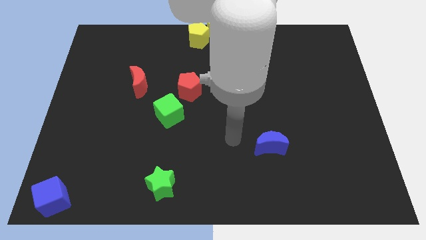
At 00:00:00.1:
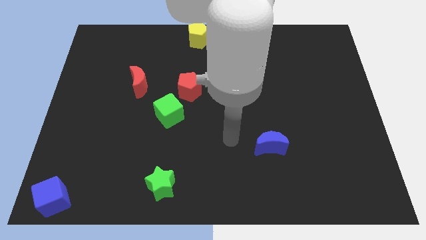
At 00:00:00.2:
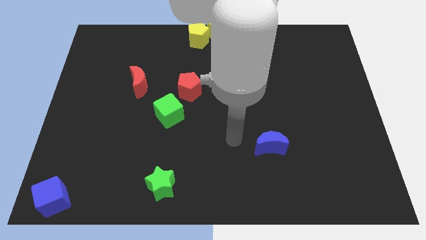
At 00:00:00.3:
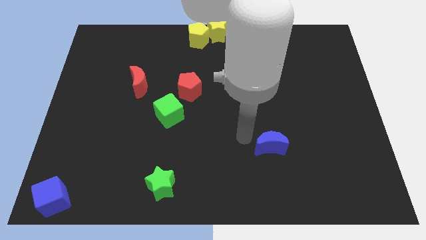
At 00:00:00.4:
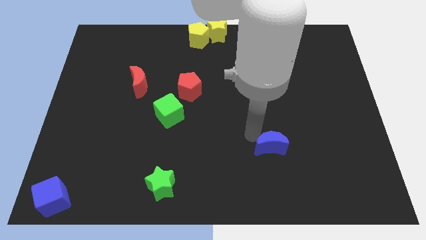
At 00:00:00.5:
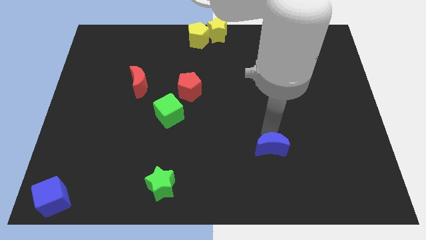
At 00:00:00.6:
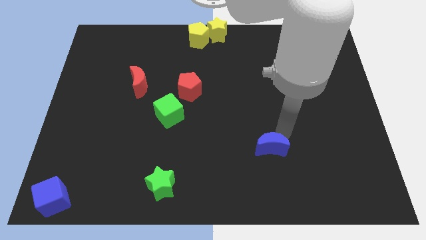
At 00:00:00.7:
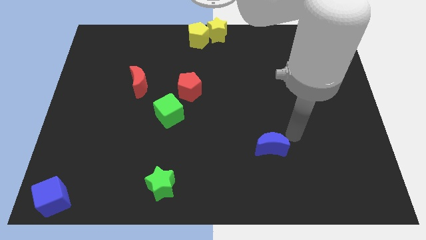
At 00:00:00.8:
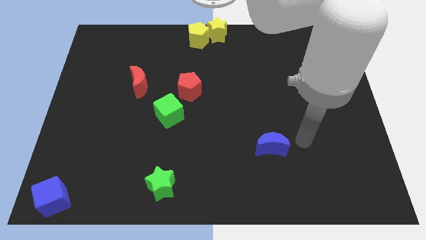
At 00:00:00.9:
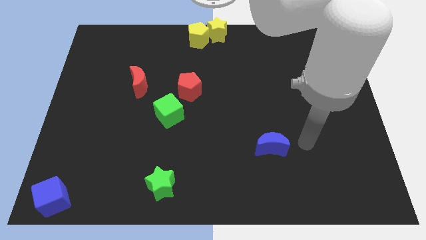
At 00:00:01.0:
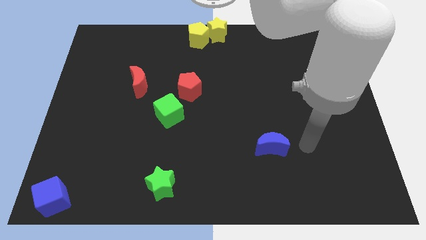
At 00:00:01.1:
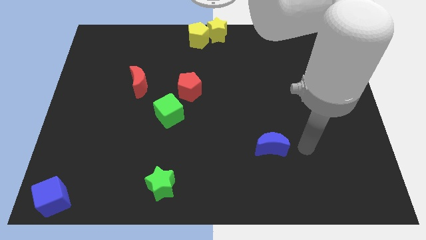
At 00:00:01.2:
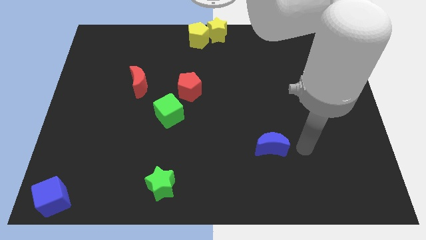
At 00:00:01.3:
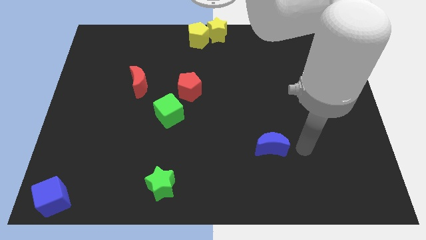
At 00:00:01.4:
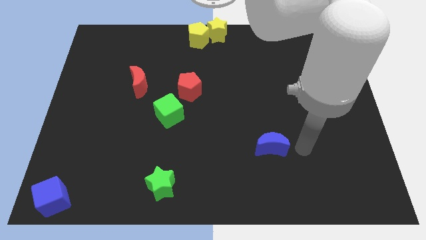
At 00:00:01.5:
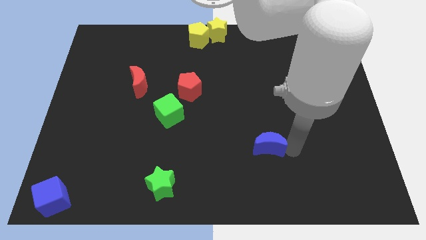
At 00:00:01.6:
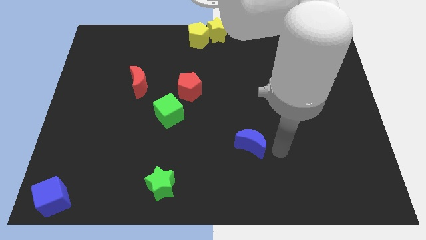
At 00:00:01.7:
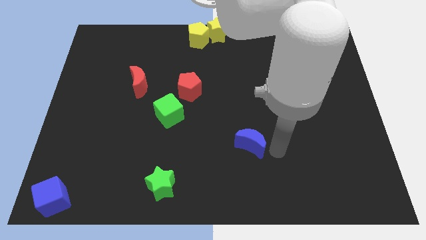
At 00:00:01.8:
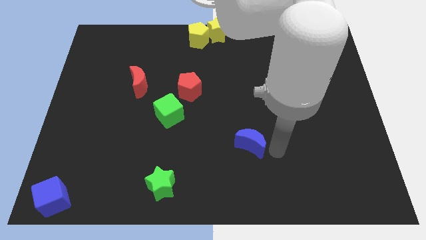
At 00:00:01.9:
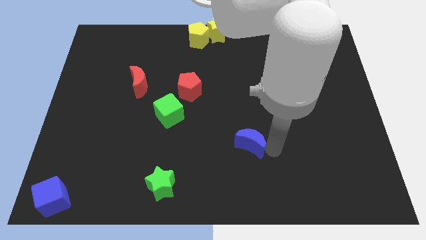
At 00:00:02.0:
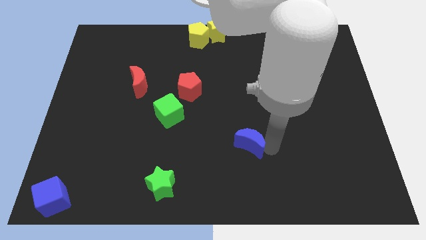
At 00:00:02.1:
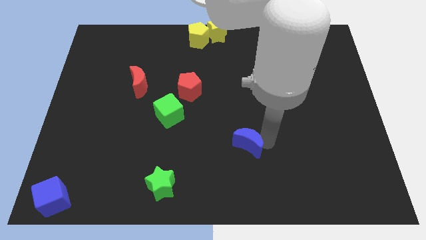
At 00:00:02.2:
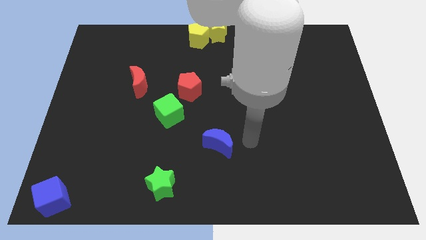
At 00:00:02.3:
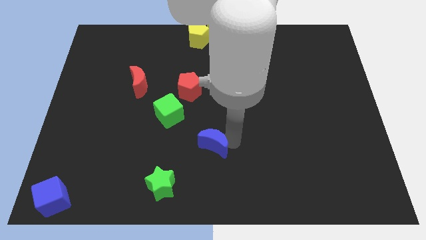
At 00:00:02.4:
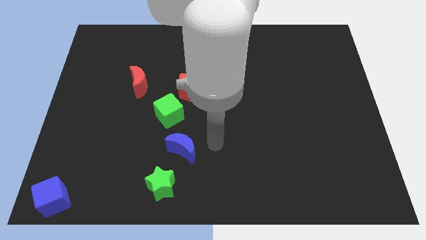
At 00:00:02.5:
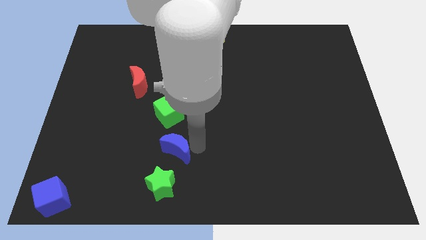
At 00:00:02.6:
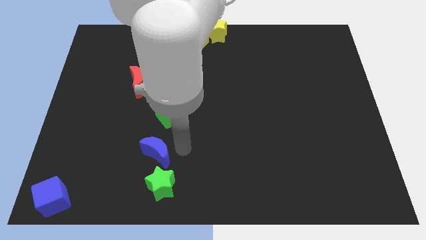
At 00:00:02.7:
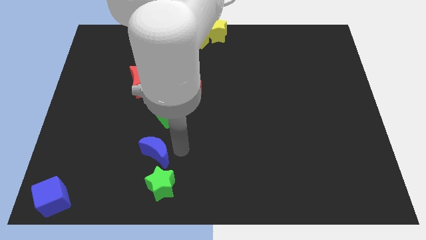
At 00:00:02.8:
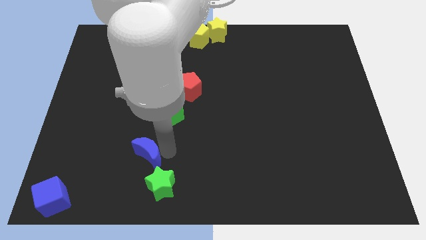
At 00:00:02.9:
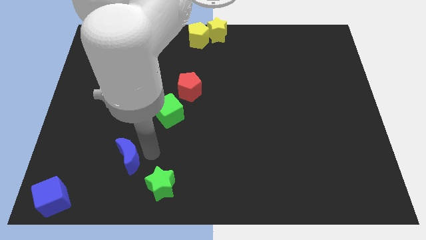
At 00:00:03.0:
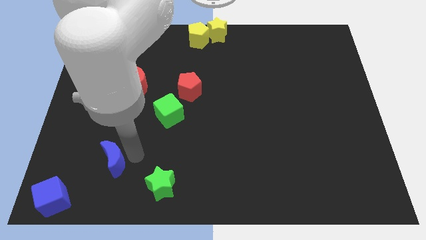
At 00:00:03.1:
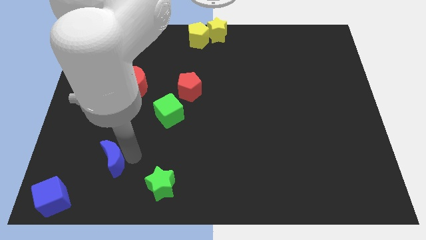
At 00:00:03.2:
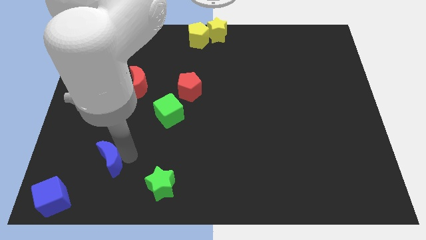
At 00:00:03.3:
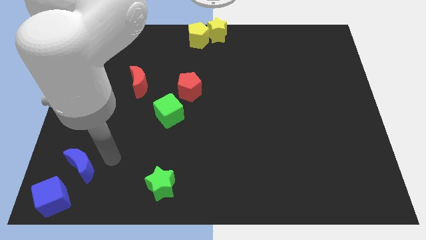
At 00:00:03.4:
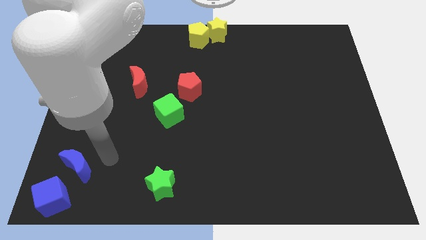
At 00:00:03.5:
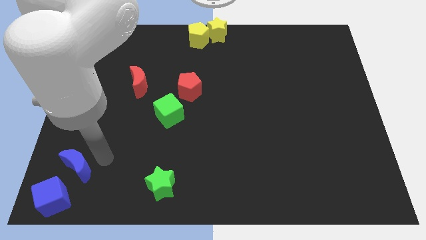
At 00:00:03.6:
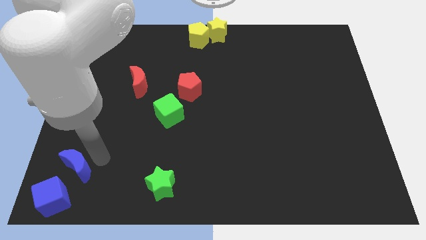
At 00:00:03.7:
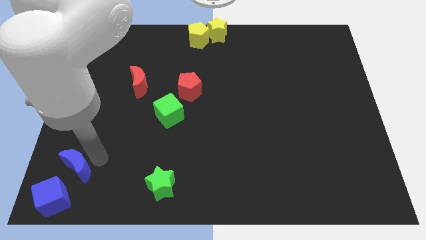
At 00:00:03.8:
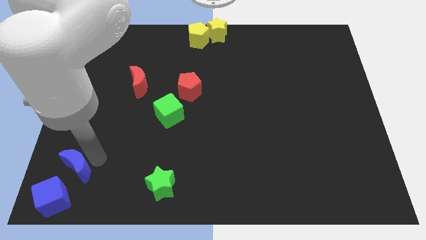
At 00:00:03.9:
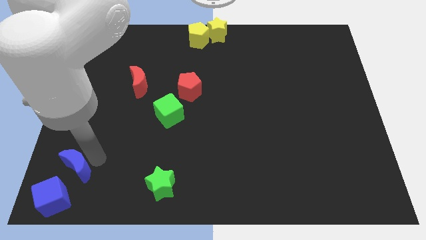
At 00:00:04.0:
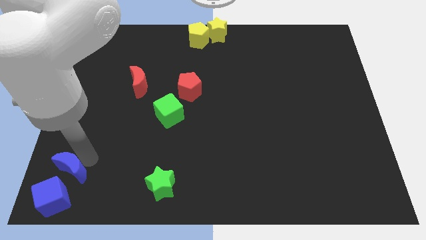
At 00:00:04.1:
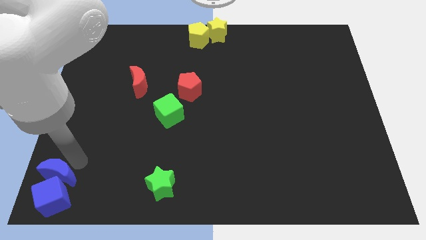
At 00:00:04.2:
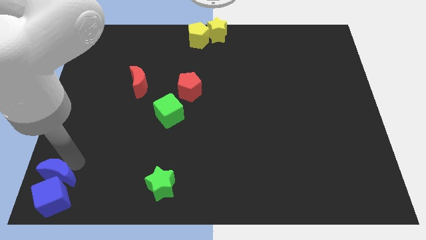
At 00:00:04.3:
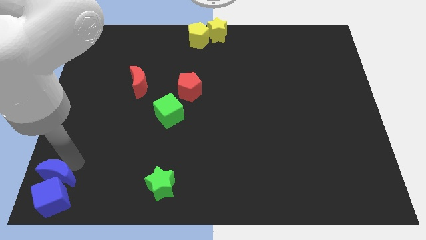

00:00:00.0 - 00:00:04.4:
move blue moon above blue cube

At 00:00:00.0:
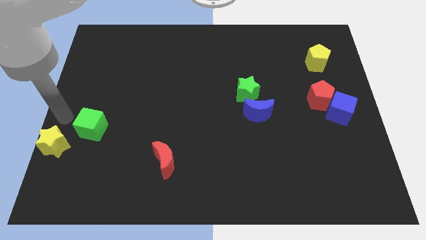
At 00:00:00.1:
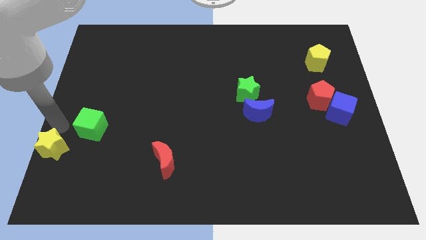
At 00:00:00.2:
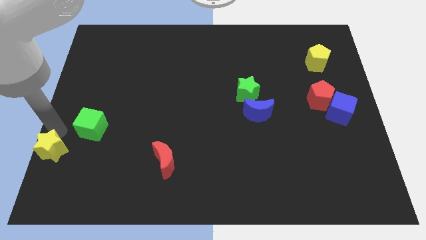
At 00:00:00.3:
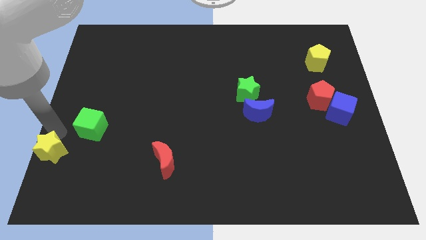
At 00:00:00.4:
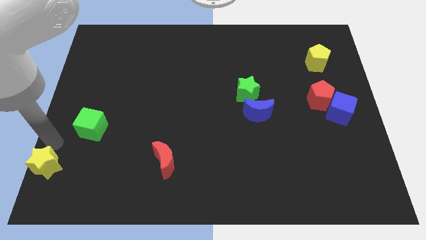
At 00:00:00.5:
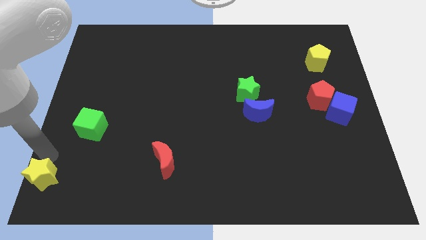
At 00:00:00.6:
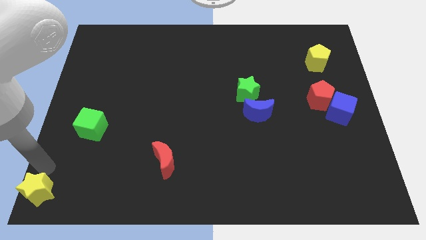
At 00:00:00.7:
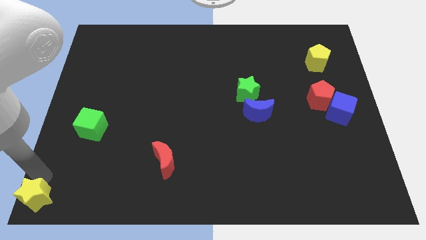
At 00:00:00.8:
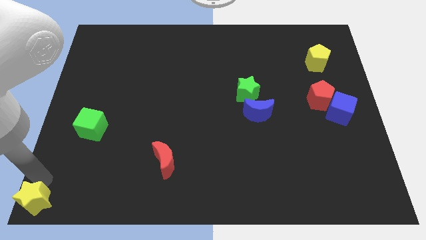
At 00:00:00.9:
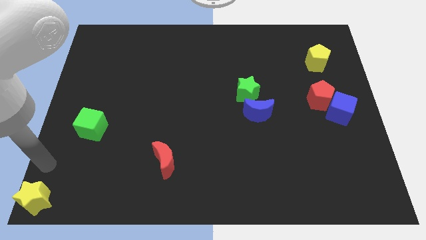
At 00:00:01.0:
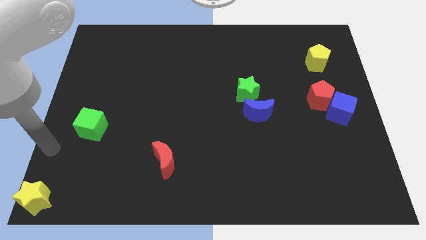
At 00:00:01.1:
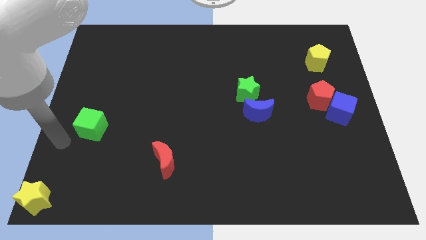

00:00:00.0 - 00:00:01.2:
place the yellow star to the left bottom

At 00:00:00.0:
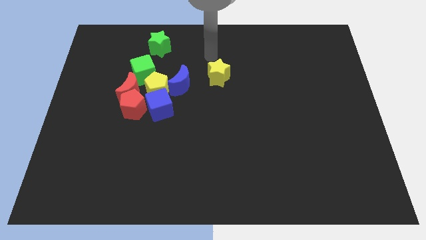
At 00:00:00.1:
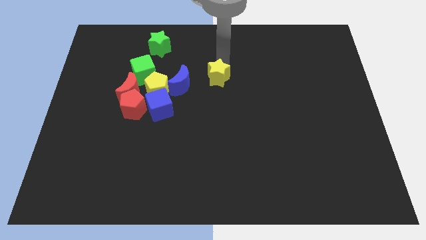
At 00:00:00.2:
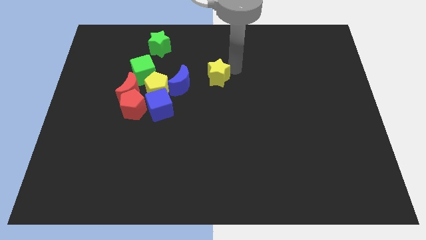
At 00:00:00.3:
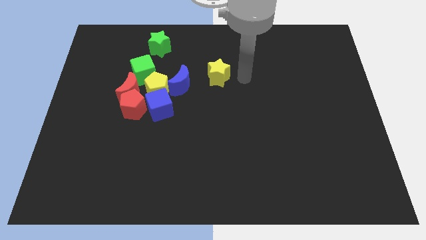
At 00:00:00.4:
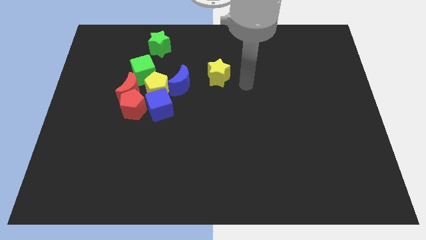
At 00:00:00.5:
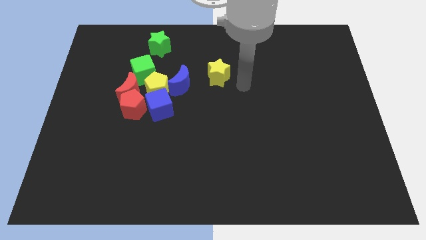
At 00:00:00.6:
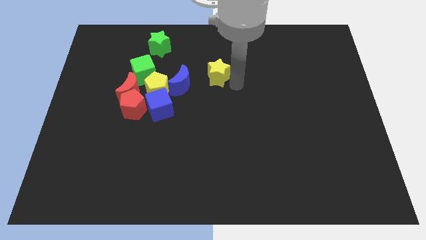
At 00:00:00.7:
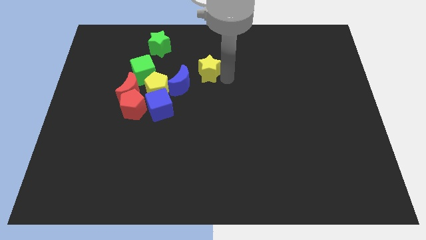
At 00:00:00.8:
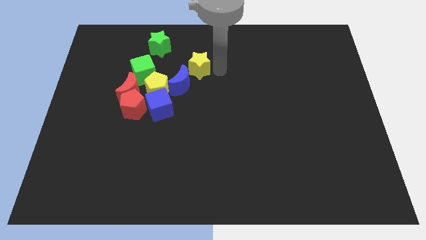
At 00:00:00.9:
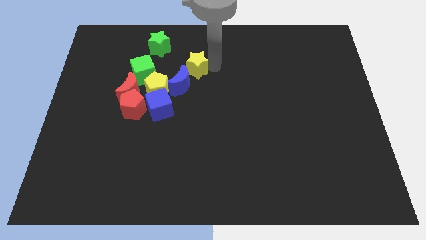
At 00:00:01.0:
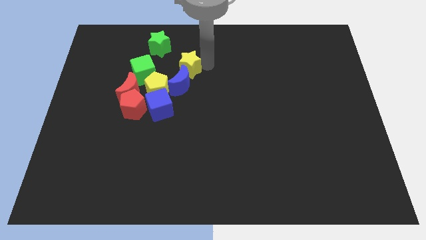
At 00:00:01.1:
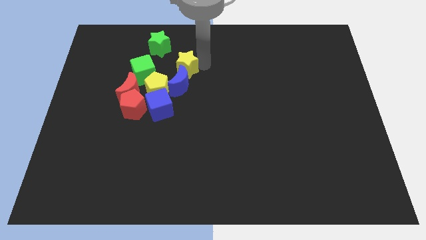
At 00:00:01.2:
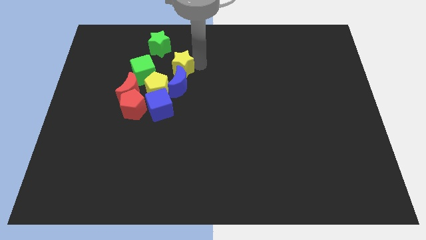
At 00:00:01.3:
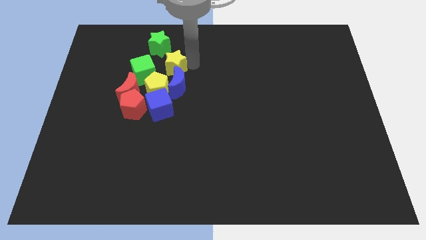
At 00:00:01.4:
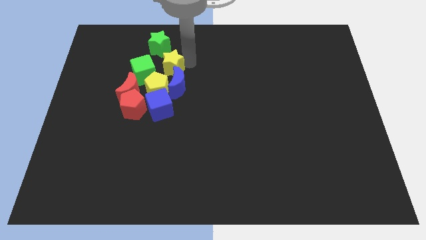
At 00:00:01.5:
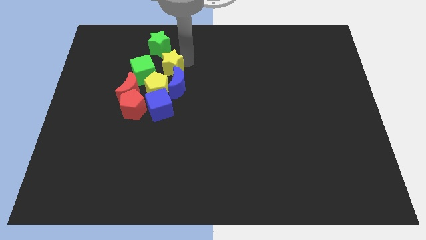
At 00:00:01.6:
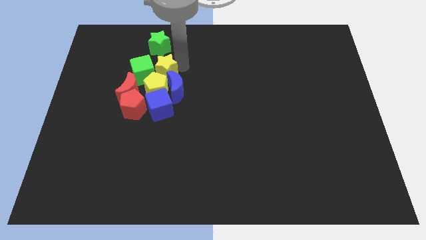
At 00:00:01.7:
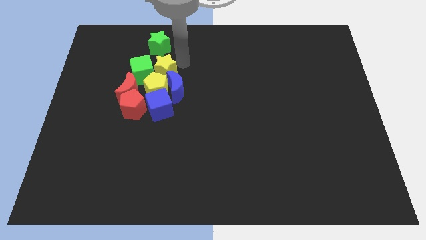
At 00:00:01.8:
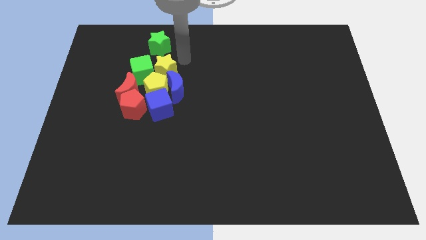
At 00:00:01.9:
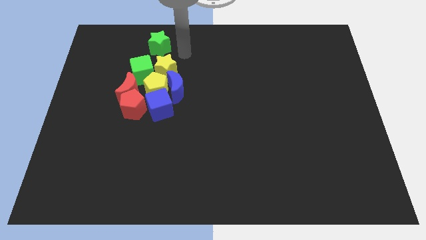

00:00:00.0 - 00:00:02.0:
push yellow star into the group of blocks to form a circle

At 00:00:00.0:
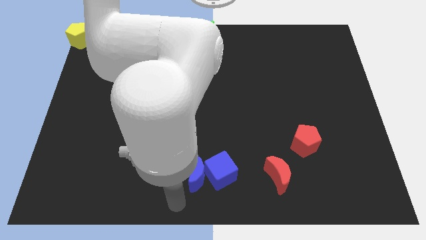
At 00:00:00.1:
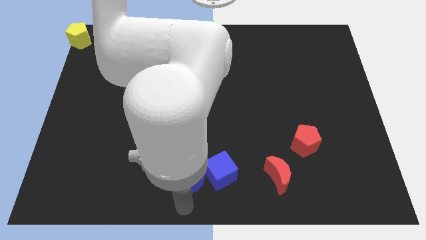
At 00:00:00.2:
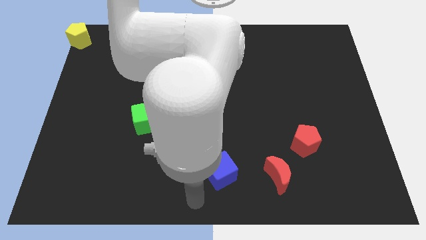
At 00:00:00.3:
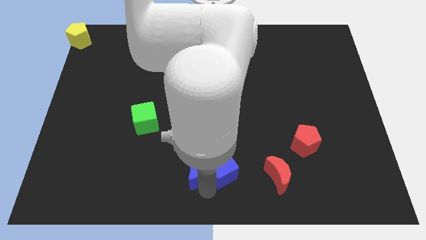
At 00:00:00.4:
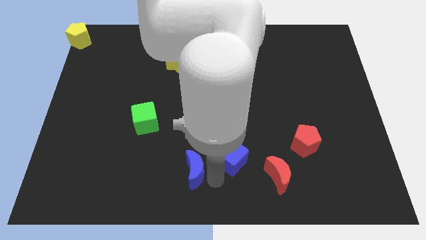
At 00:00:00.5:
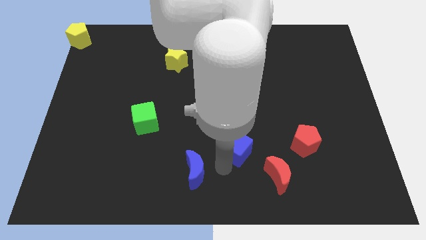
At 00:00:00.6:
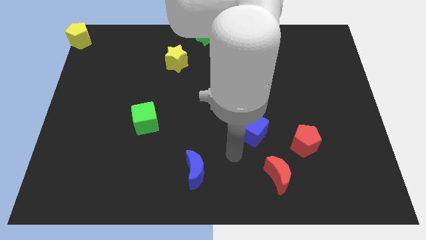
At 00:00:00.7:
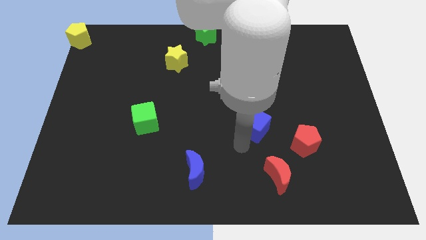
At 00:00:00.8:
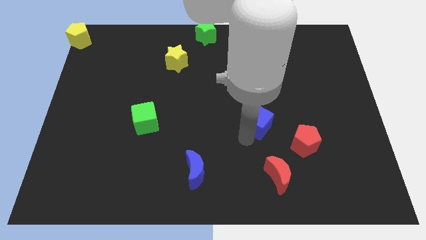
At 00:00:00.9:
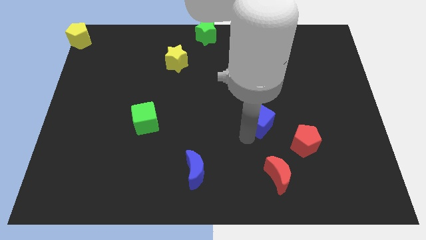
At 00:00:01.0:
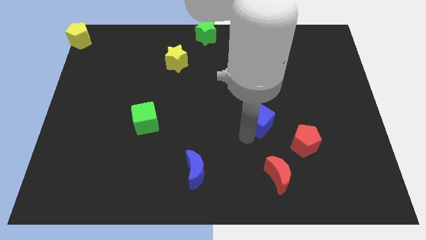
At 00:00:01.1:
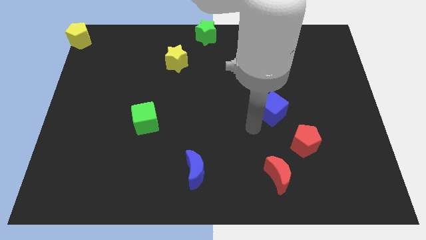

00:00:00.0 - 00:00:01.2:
move the blue cube away from the blue crescent
